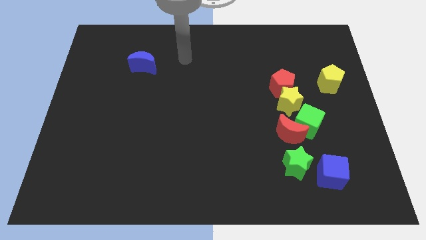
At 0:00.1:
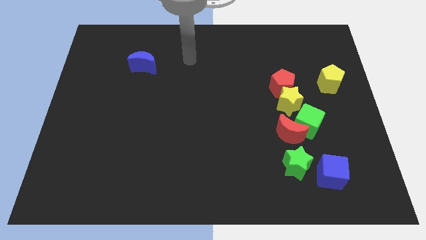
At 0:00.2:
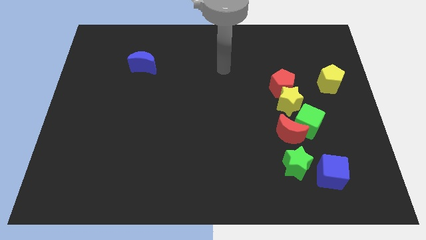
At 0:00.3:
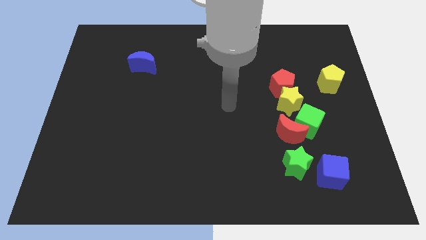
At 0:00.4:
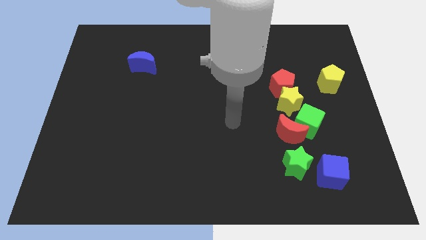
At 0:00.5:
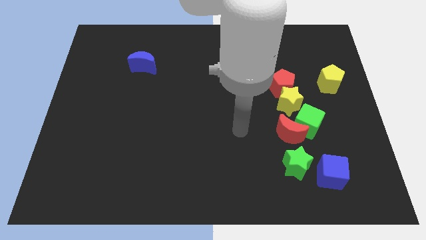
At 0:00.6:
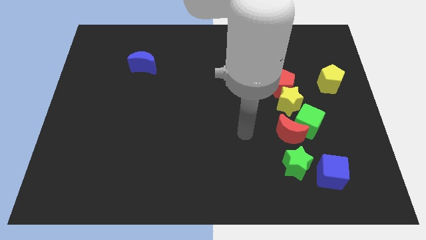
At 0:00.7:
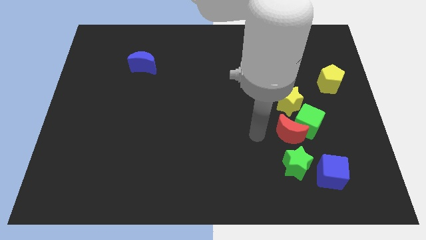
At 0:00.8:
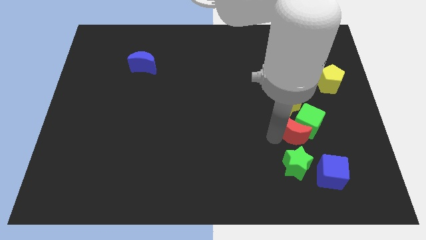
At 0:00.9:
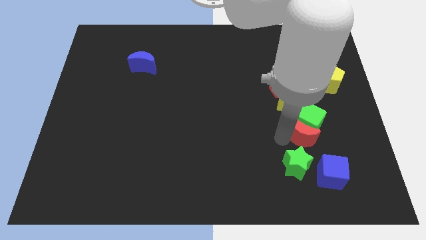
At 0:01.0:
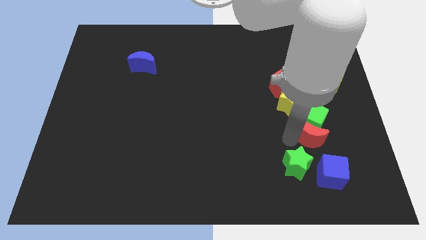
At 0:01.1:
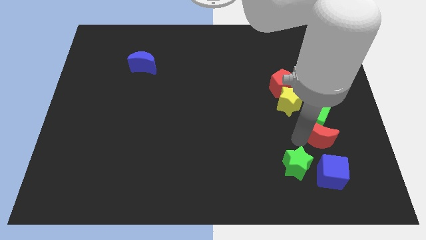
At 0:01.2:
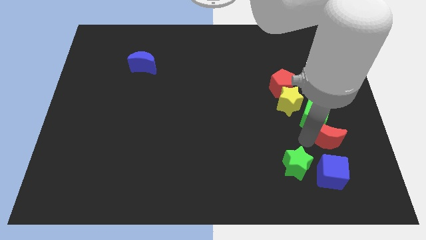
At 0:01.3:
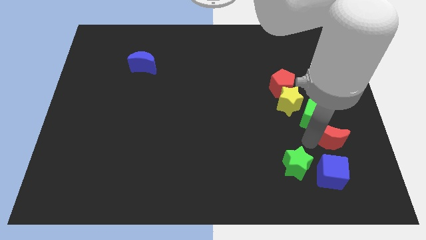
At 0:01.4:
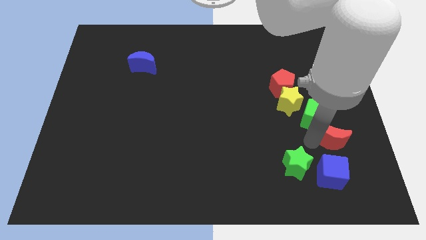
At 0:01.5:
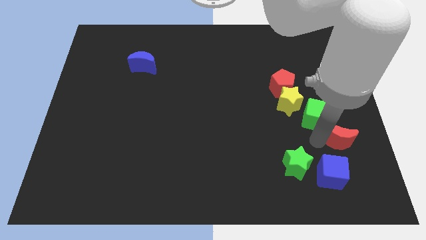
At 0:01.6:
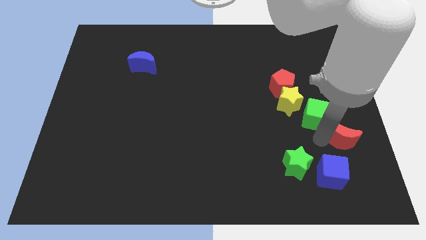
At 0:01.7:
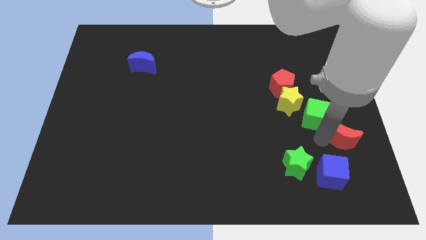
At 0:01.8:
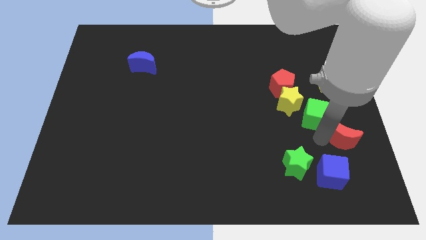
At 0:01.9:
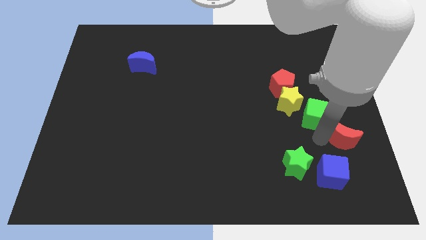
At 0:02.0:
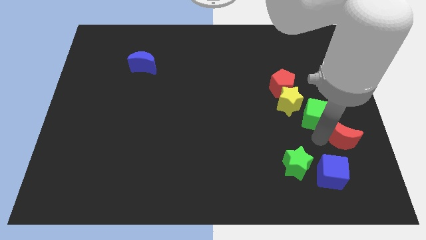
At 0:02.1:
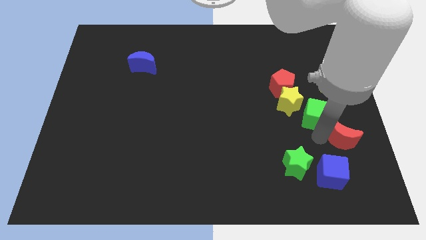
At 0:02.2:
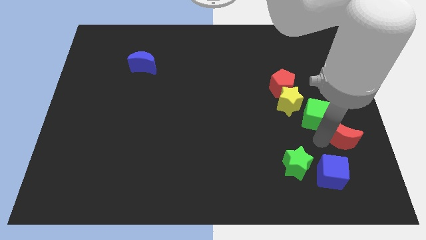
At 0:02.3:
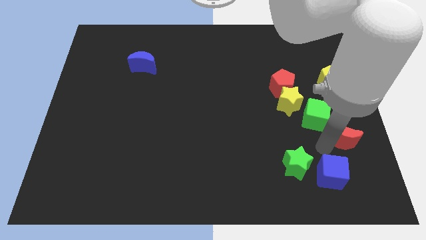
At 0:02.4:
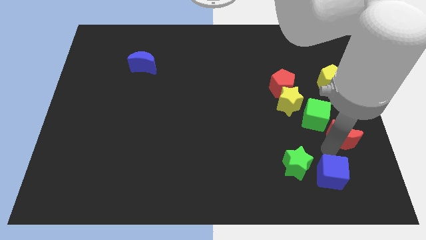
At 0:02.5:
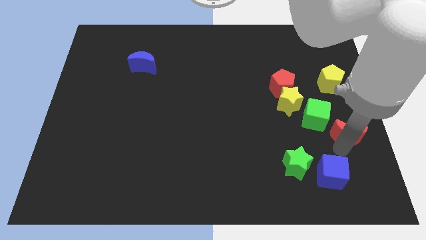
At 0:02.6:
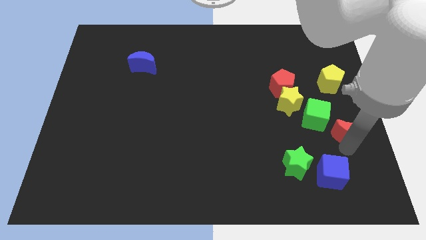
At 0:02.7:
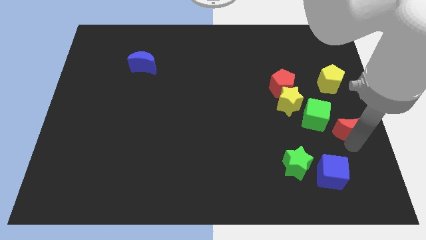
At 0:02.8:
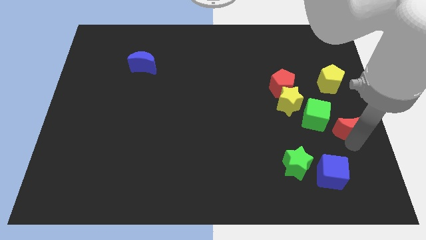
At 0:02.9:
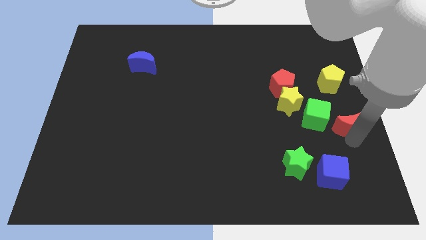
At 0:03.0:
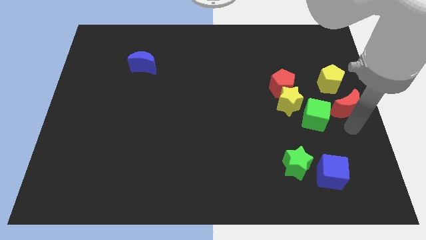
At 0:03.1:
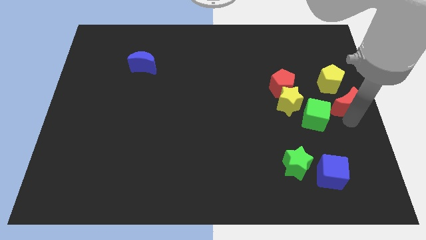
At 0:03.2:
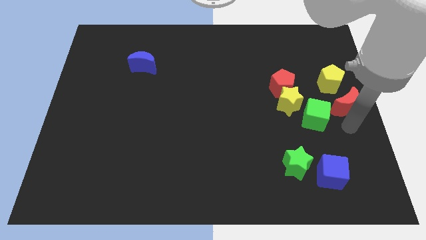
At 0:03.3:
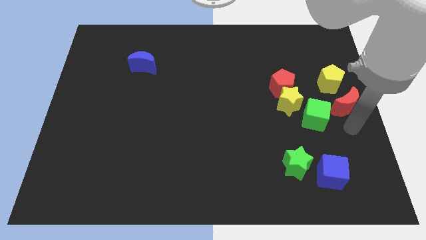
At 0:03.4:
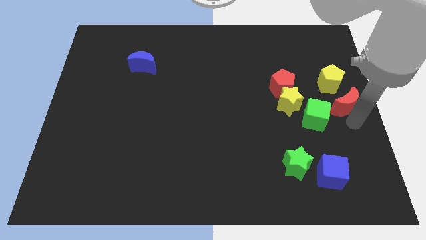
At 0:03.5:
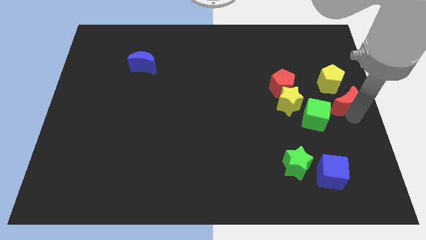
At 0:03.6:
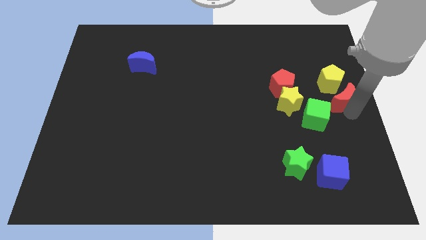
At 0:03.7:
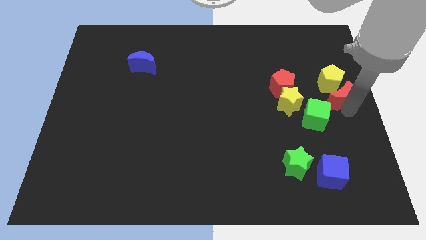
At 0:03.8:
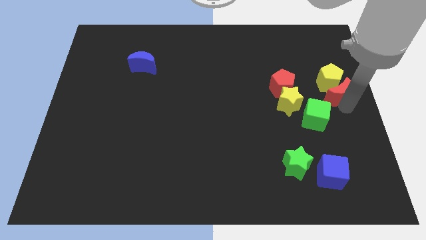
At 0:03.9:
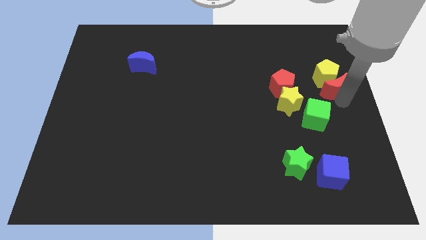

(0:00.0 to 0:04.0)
move the red moon close to the yellow pentagon

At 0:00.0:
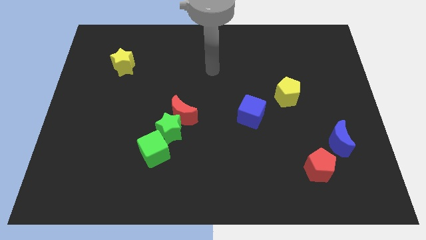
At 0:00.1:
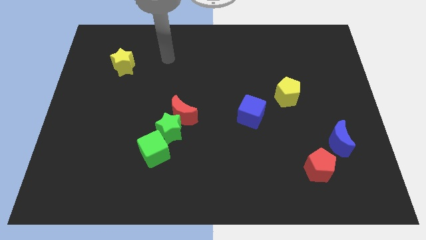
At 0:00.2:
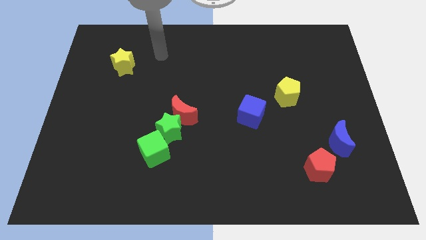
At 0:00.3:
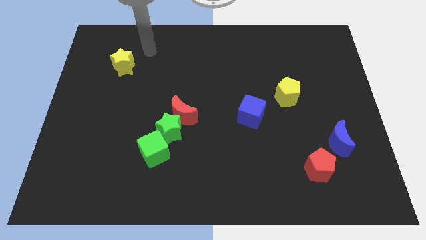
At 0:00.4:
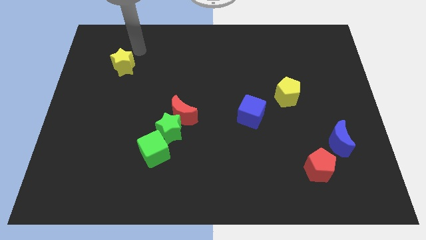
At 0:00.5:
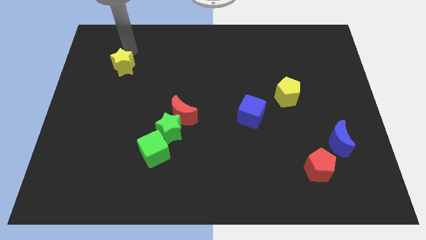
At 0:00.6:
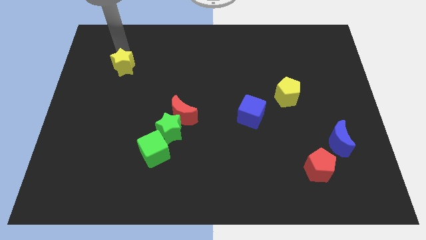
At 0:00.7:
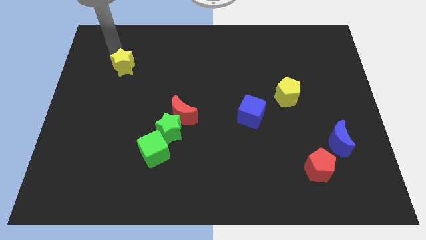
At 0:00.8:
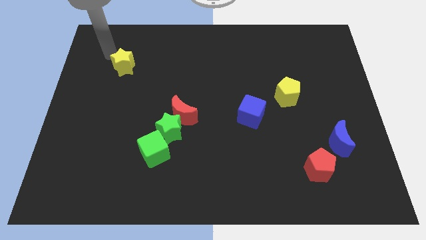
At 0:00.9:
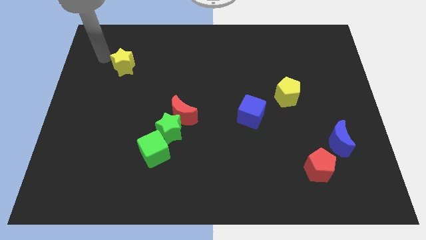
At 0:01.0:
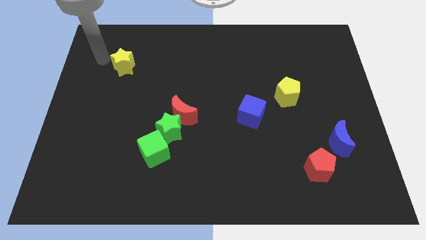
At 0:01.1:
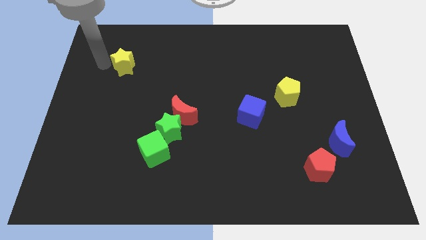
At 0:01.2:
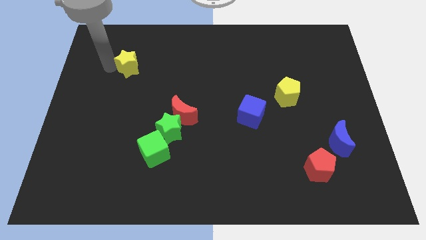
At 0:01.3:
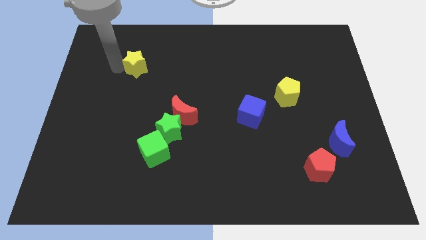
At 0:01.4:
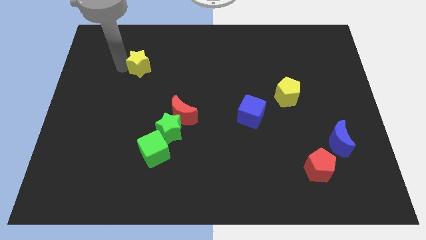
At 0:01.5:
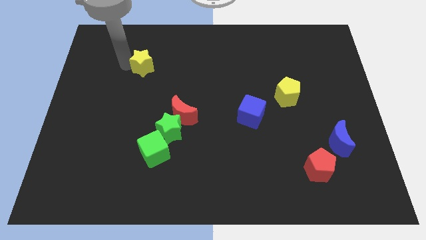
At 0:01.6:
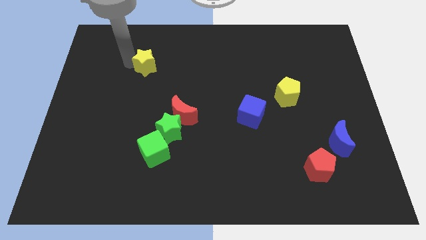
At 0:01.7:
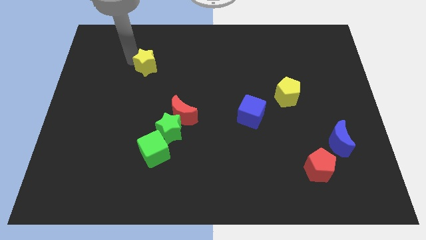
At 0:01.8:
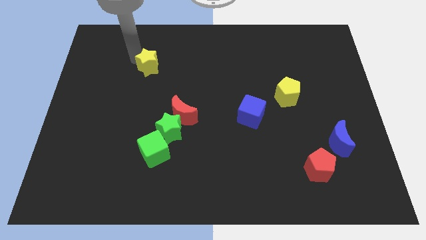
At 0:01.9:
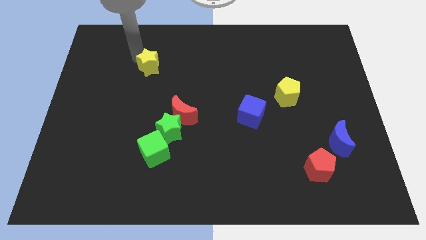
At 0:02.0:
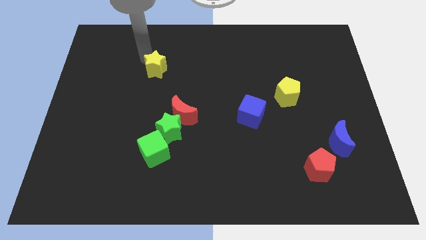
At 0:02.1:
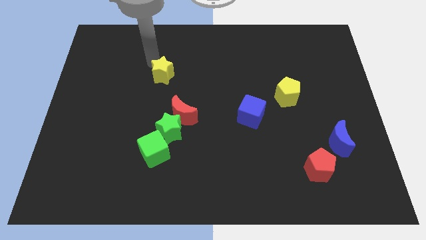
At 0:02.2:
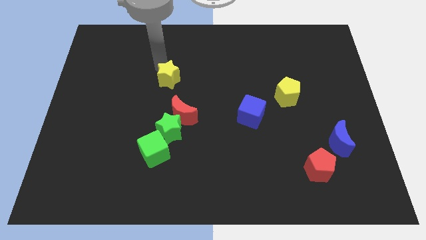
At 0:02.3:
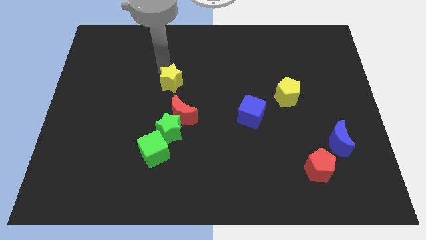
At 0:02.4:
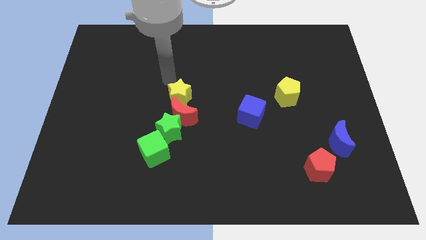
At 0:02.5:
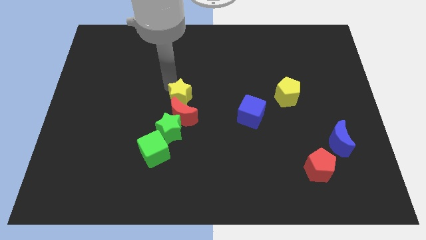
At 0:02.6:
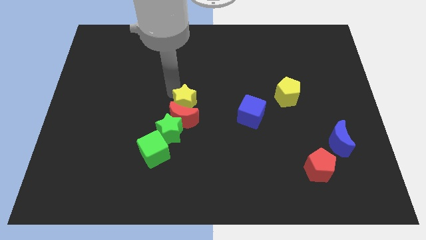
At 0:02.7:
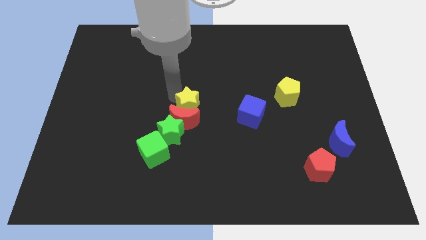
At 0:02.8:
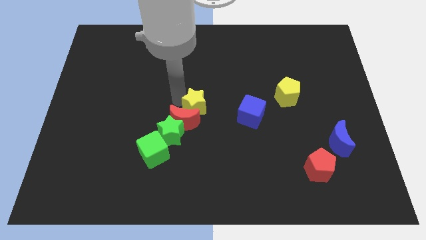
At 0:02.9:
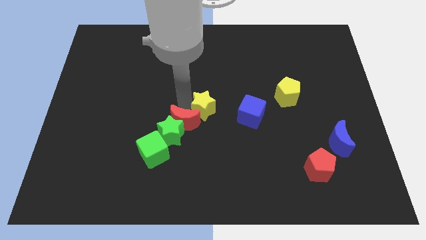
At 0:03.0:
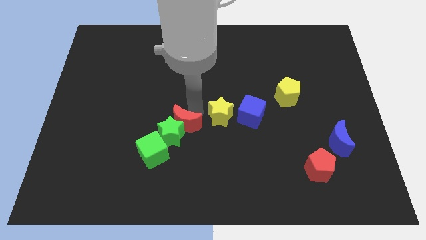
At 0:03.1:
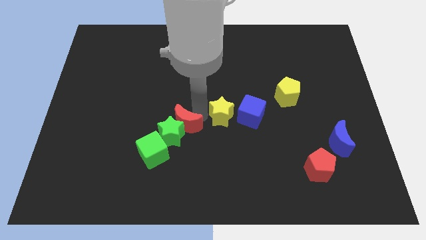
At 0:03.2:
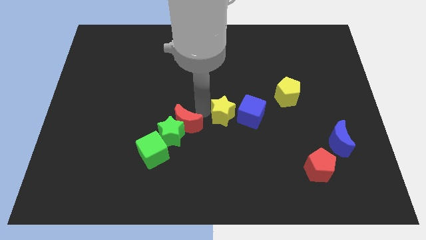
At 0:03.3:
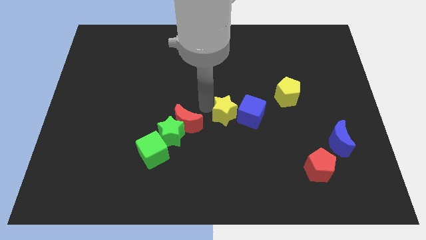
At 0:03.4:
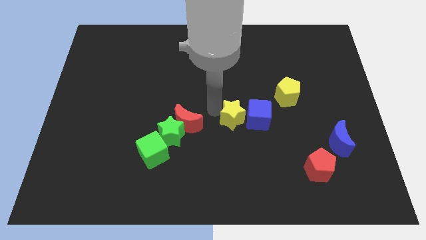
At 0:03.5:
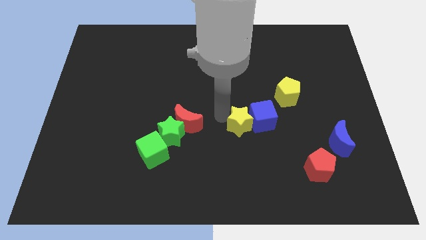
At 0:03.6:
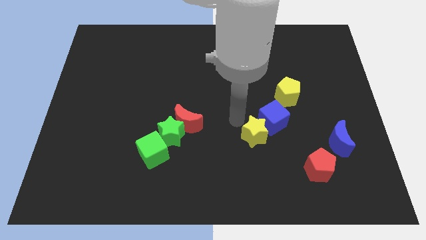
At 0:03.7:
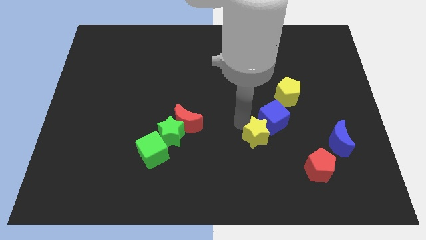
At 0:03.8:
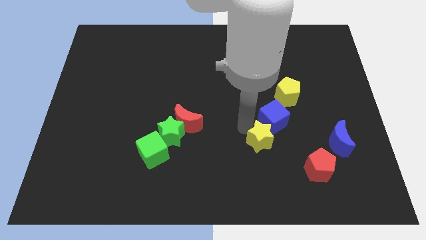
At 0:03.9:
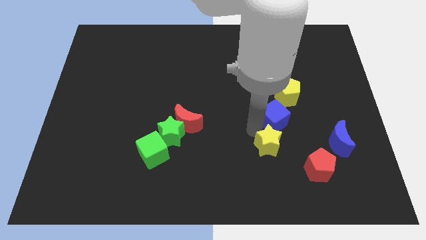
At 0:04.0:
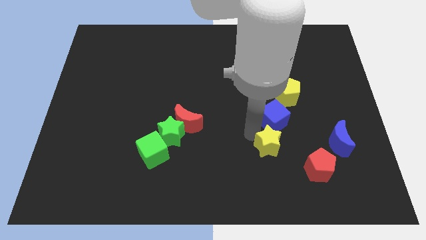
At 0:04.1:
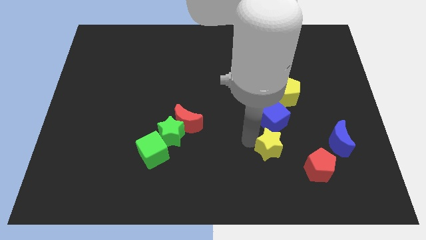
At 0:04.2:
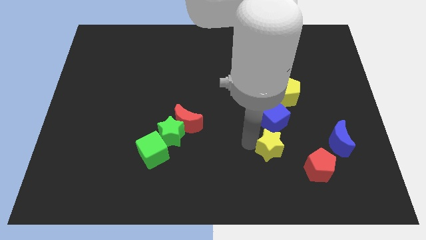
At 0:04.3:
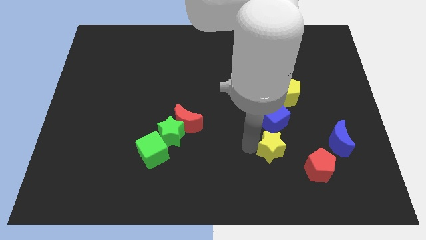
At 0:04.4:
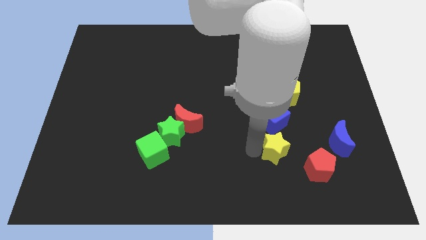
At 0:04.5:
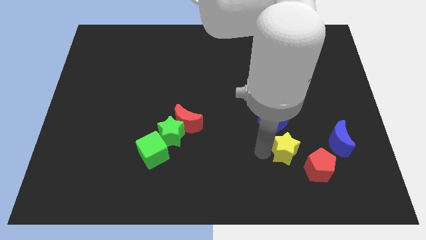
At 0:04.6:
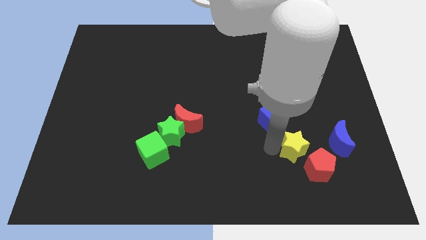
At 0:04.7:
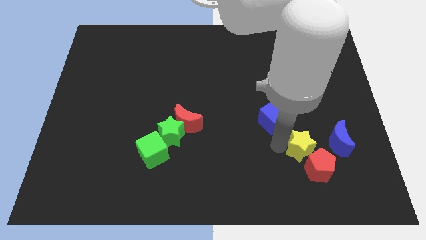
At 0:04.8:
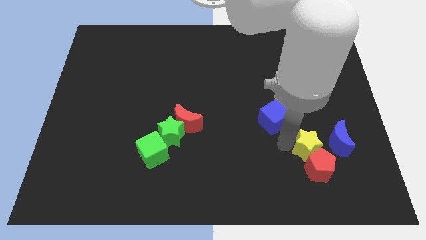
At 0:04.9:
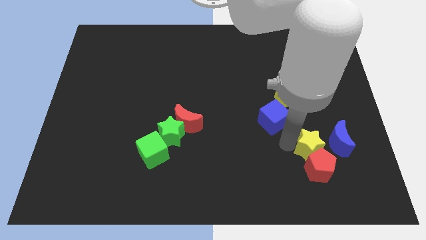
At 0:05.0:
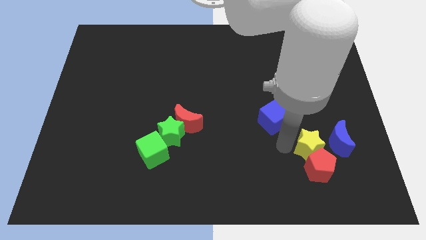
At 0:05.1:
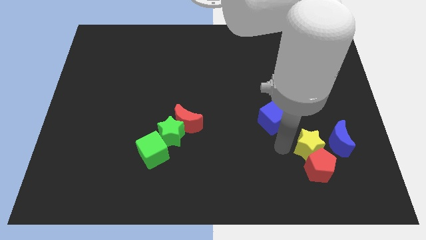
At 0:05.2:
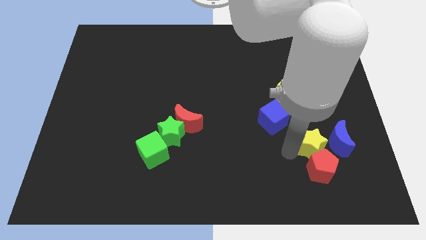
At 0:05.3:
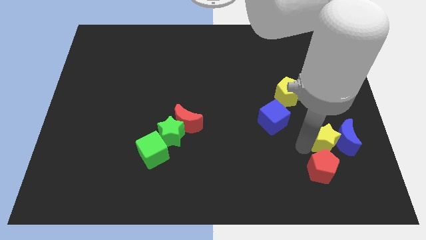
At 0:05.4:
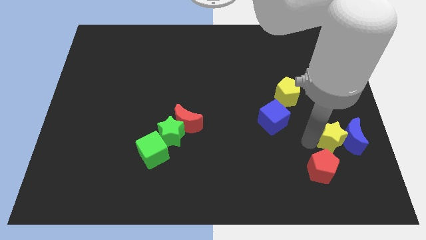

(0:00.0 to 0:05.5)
move the yellow star to the blue moon
